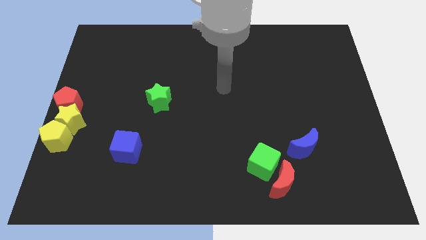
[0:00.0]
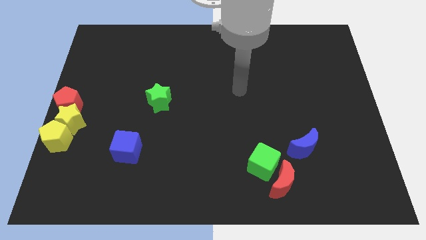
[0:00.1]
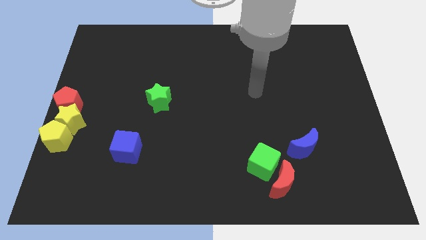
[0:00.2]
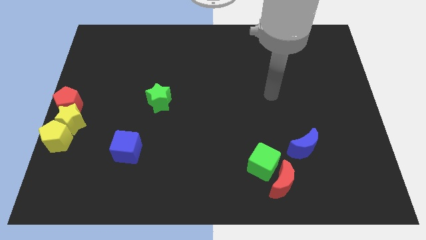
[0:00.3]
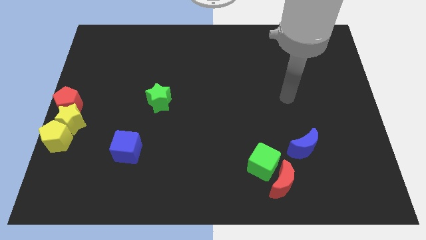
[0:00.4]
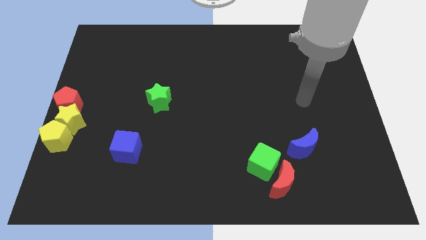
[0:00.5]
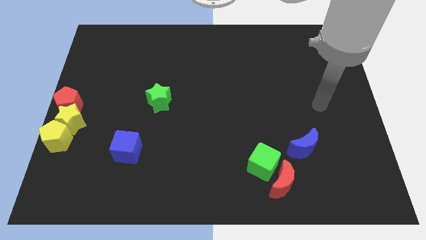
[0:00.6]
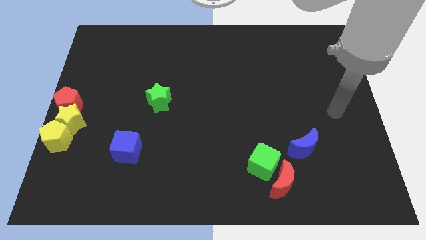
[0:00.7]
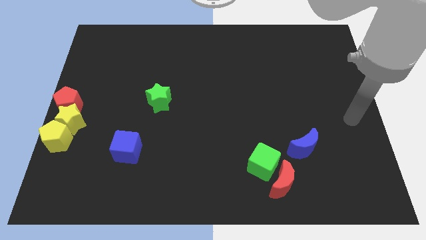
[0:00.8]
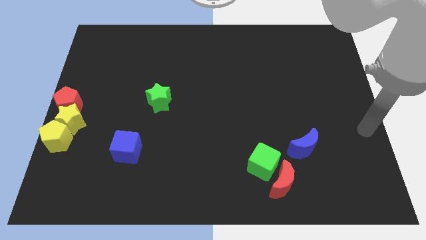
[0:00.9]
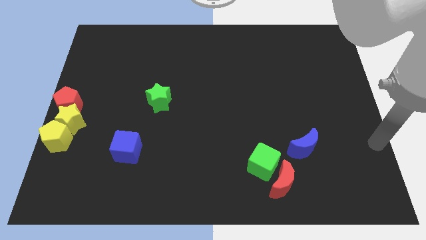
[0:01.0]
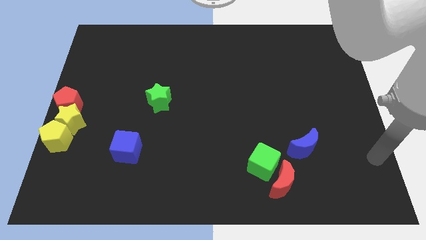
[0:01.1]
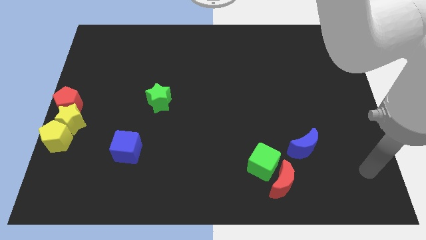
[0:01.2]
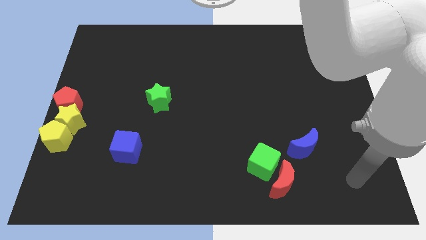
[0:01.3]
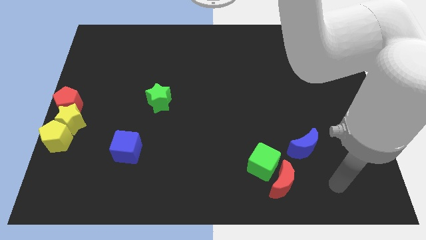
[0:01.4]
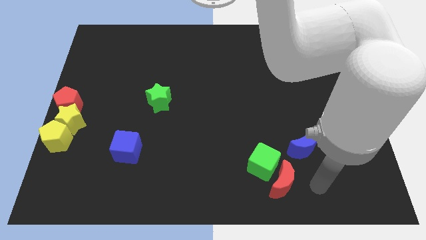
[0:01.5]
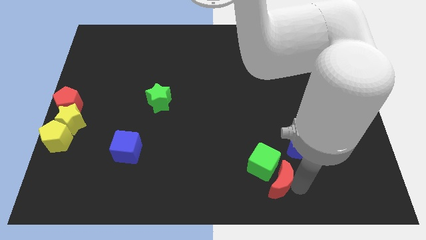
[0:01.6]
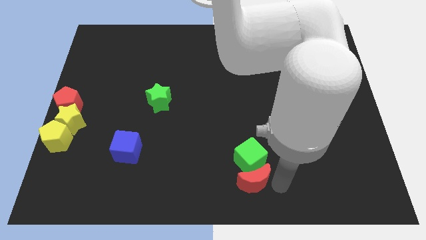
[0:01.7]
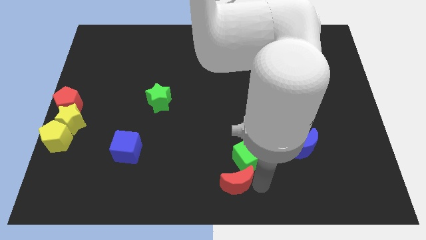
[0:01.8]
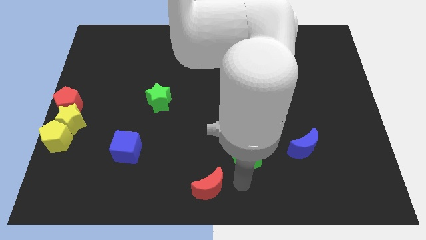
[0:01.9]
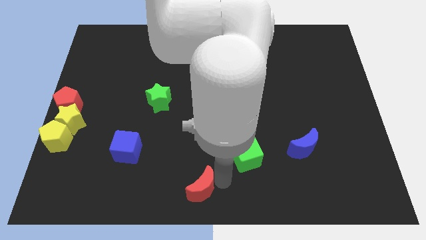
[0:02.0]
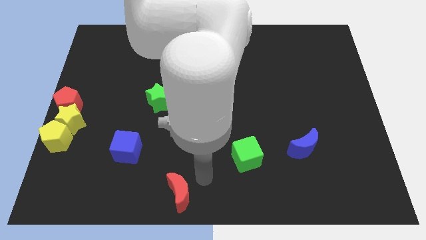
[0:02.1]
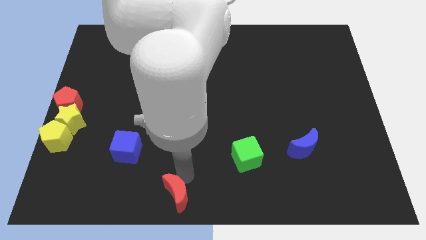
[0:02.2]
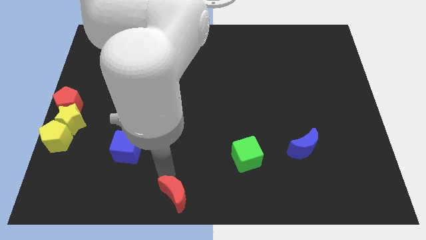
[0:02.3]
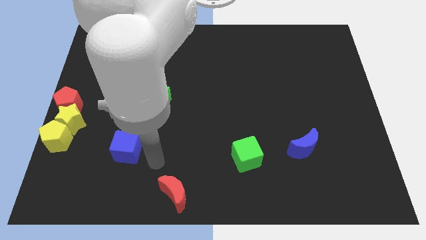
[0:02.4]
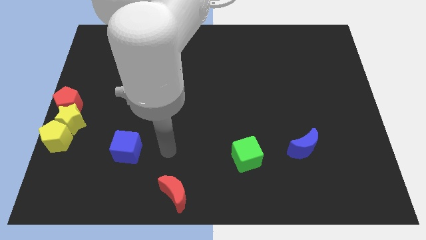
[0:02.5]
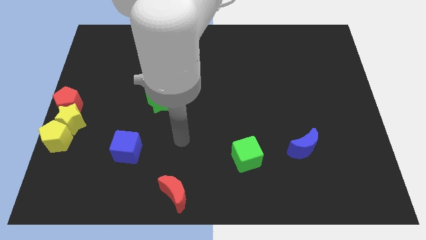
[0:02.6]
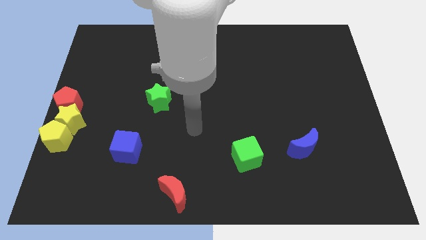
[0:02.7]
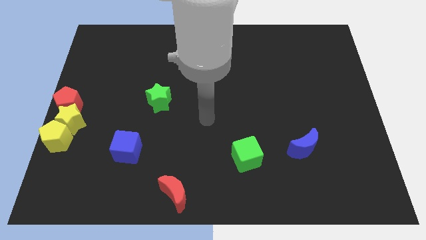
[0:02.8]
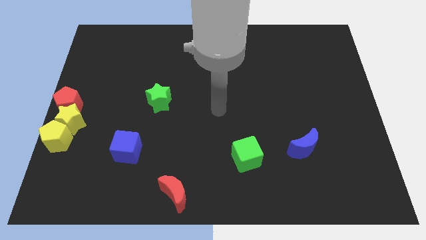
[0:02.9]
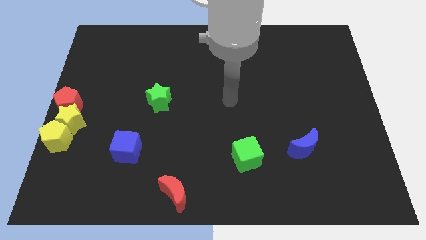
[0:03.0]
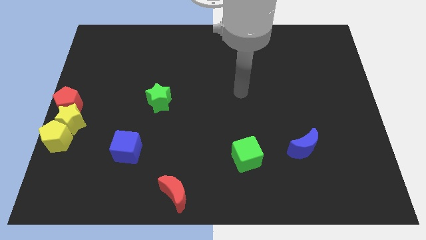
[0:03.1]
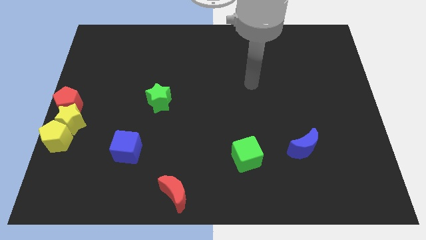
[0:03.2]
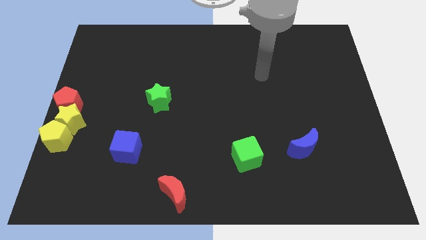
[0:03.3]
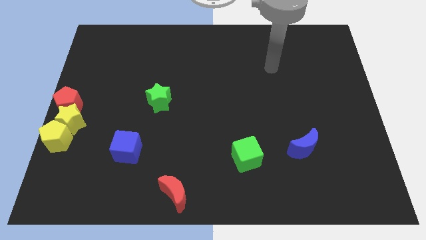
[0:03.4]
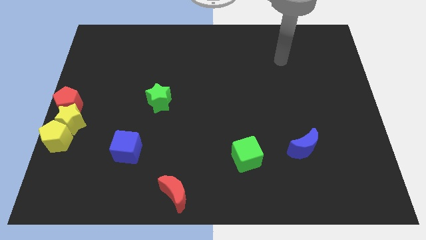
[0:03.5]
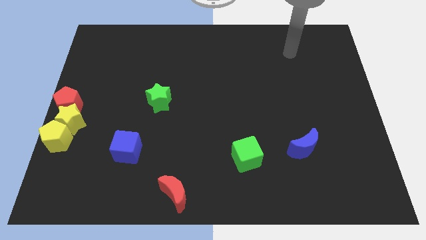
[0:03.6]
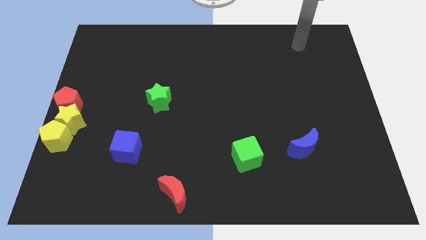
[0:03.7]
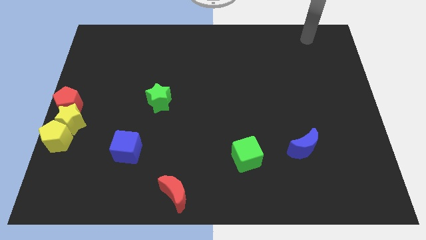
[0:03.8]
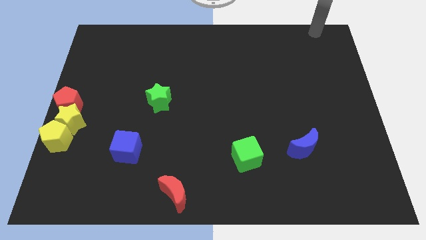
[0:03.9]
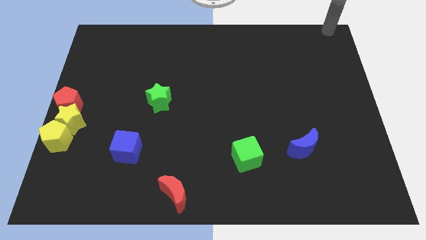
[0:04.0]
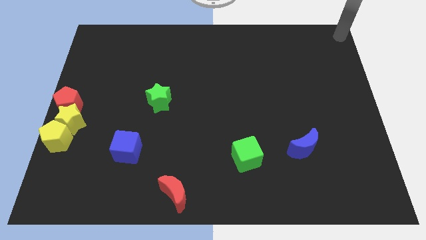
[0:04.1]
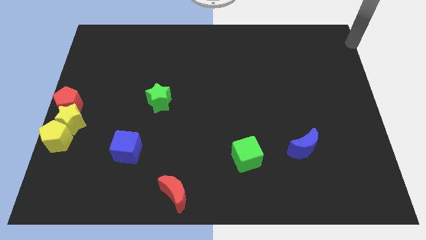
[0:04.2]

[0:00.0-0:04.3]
move the red moon to the bottom center of the board

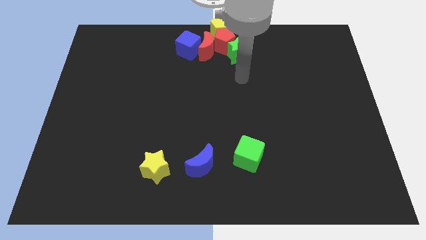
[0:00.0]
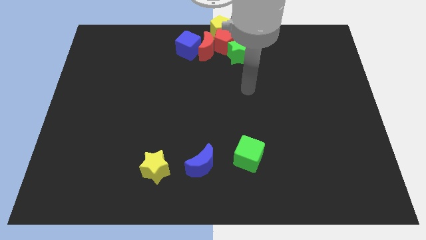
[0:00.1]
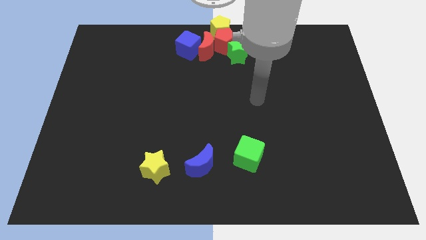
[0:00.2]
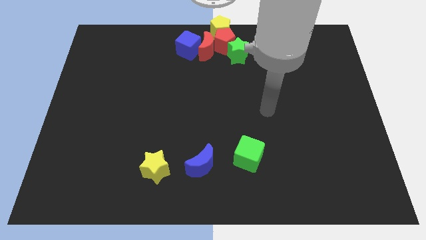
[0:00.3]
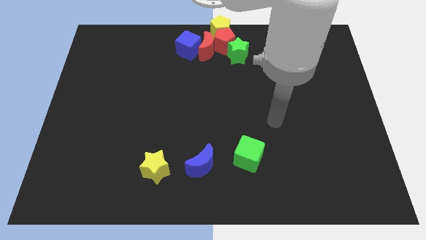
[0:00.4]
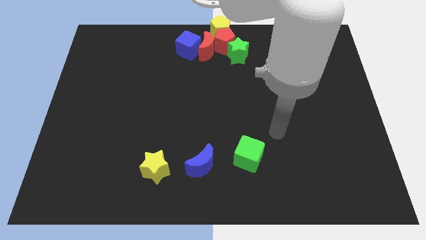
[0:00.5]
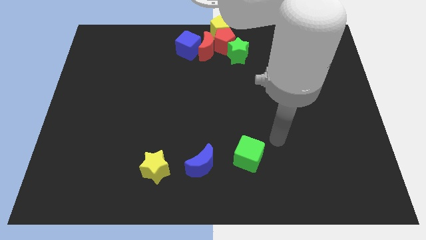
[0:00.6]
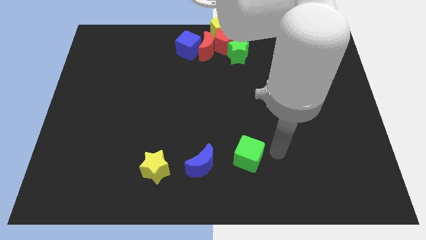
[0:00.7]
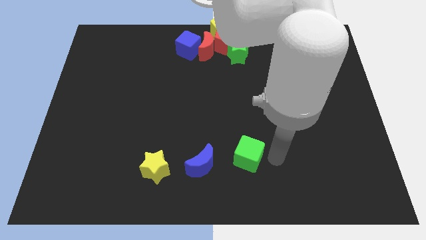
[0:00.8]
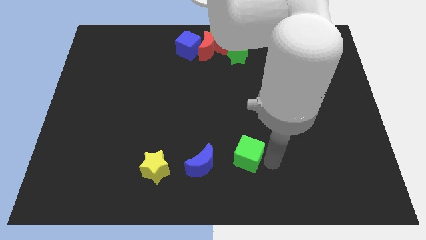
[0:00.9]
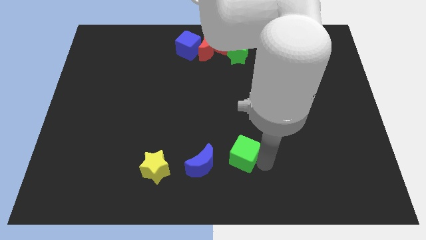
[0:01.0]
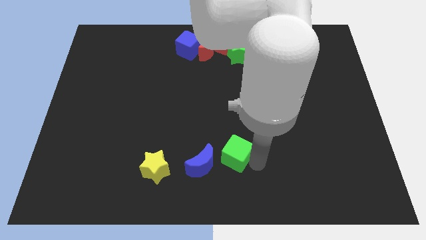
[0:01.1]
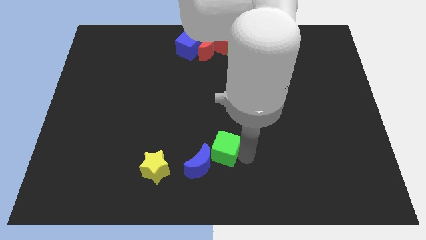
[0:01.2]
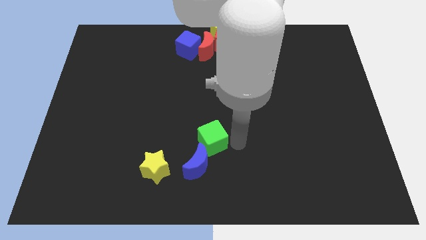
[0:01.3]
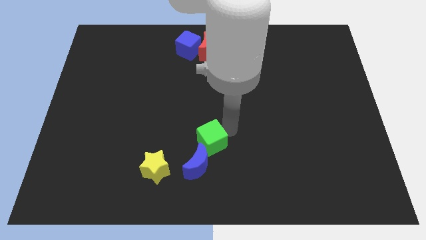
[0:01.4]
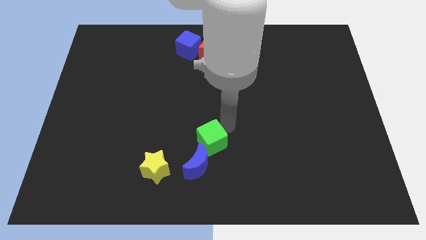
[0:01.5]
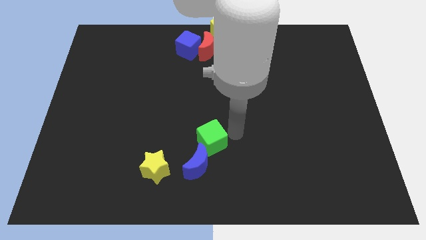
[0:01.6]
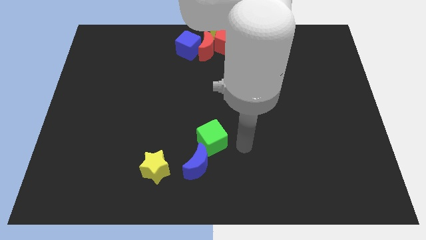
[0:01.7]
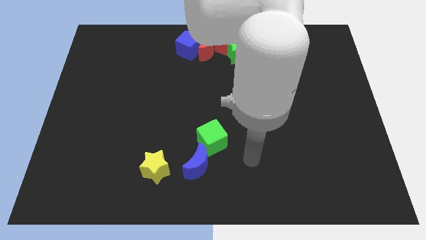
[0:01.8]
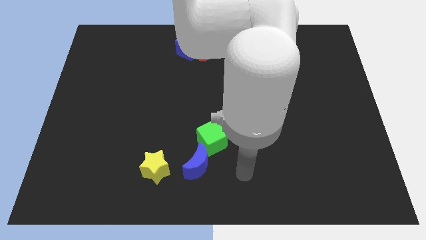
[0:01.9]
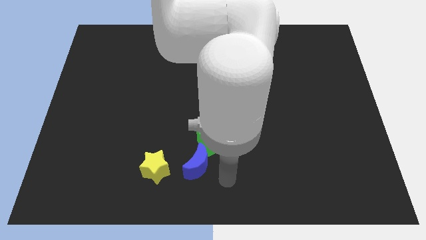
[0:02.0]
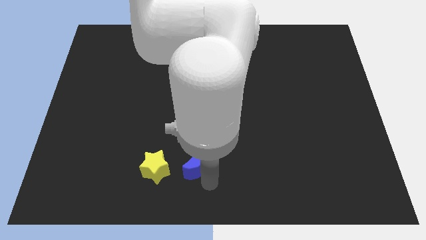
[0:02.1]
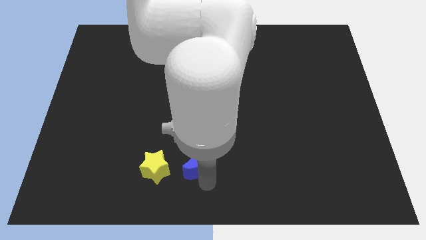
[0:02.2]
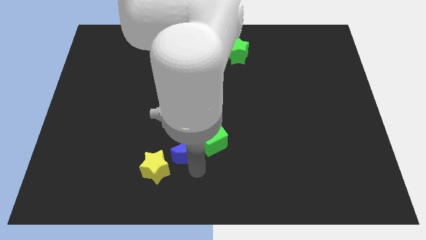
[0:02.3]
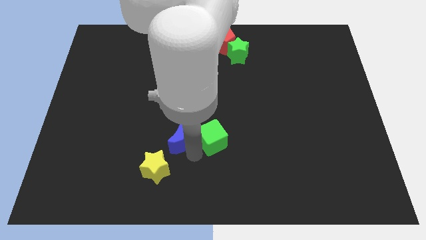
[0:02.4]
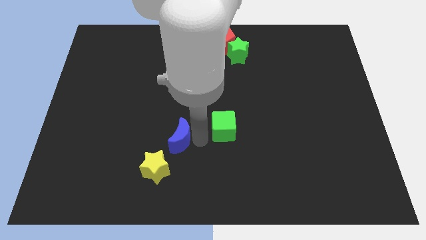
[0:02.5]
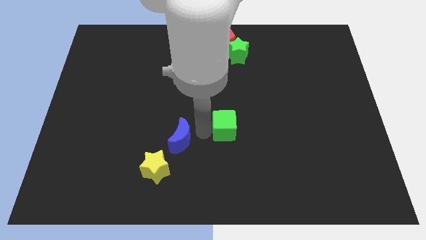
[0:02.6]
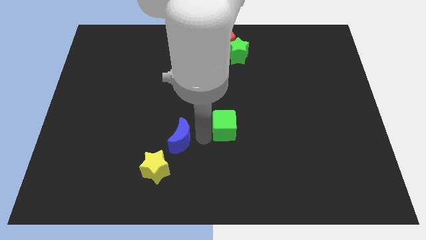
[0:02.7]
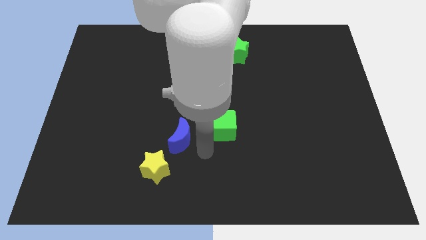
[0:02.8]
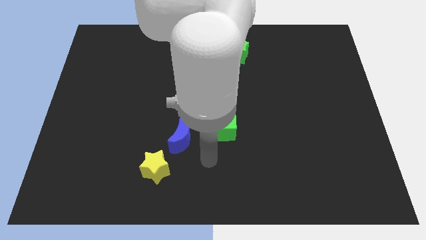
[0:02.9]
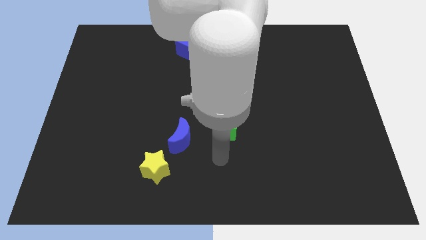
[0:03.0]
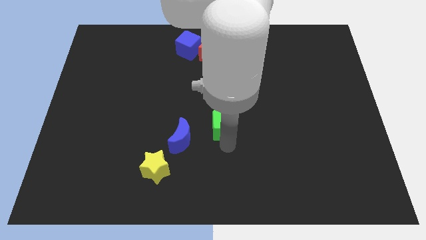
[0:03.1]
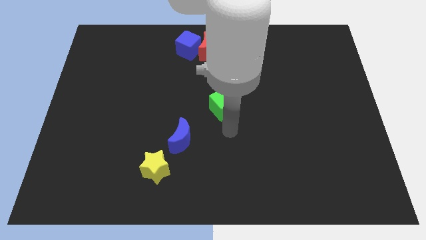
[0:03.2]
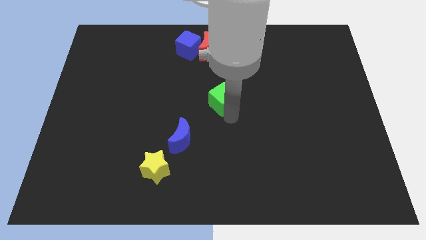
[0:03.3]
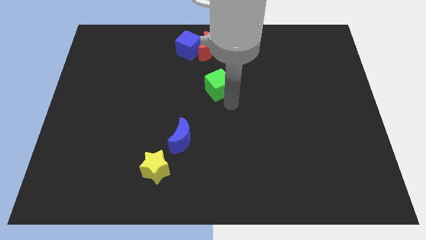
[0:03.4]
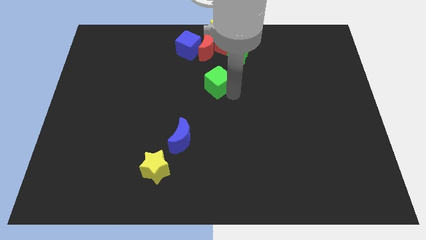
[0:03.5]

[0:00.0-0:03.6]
push the green cube to the top of the board

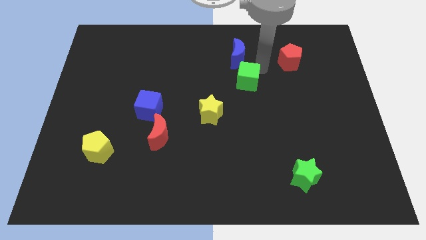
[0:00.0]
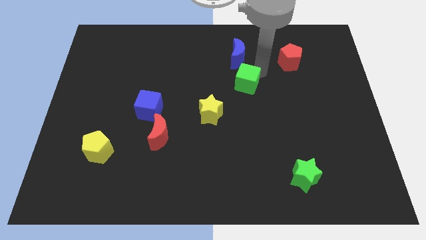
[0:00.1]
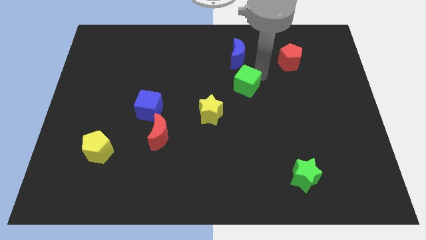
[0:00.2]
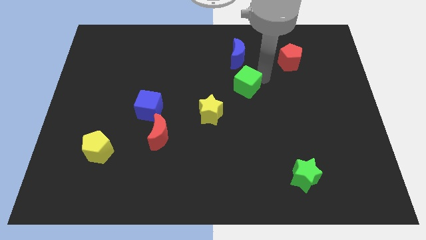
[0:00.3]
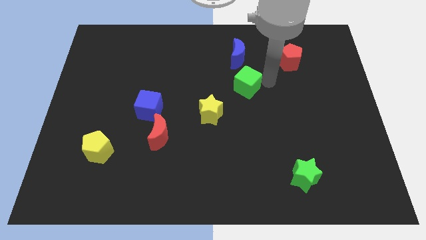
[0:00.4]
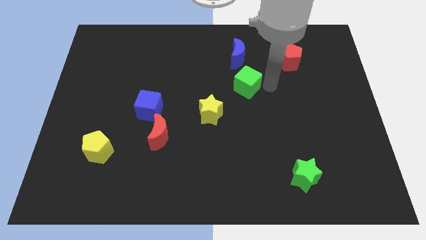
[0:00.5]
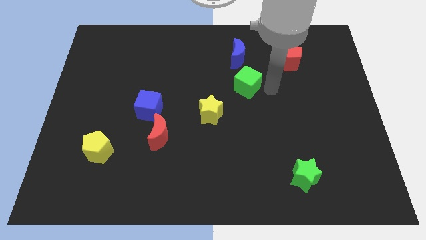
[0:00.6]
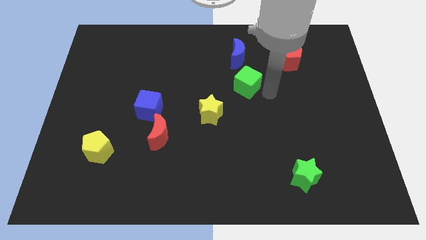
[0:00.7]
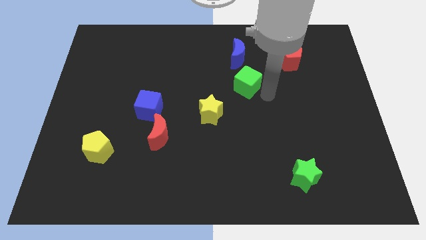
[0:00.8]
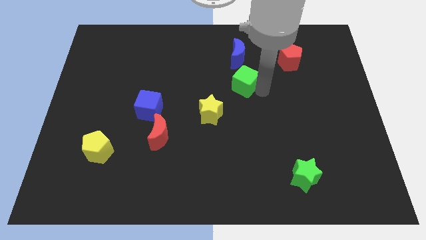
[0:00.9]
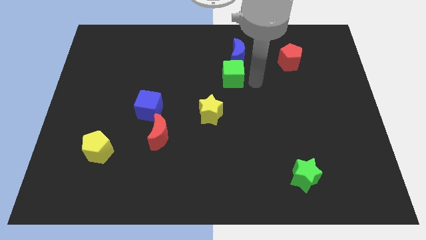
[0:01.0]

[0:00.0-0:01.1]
move green cube below blue moon
